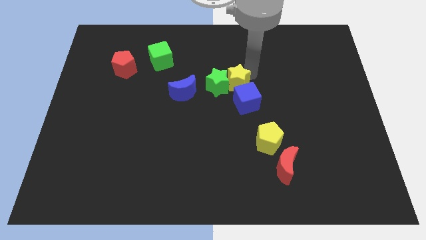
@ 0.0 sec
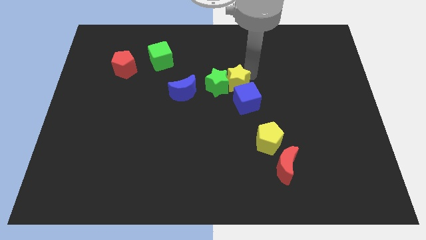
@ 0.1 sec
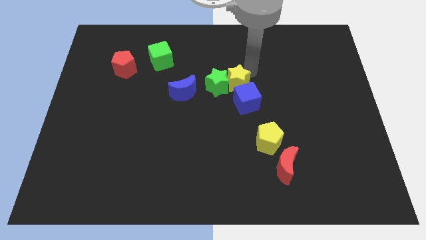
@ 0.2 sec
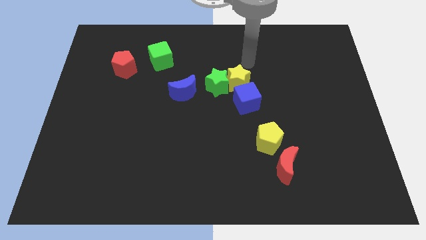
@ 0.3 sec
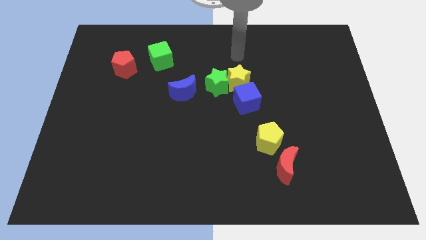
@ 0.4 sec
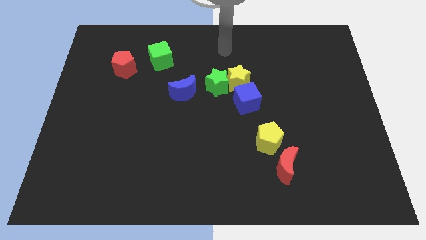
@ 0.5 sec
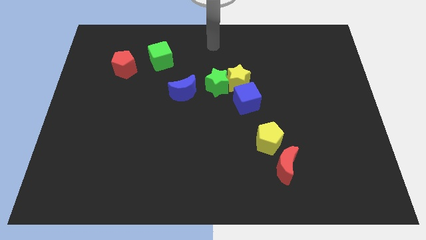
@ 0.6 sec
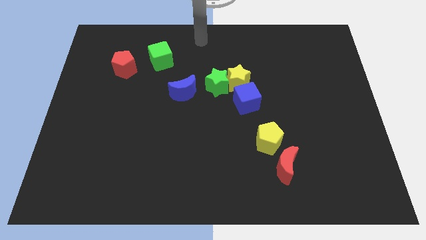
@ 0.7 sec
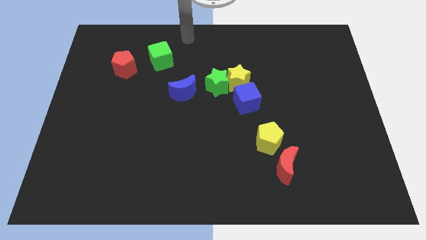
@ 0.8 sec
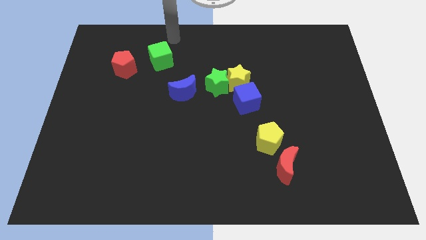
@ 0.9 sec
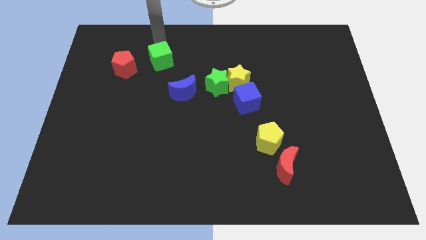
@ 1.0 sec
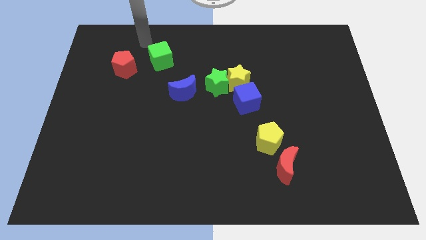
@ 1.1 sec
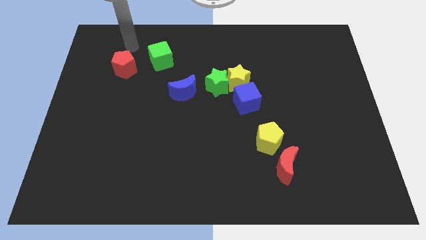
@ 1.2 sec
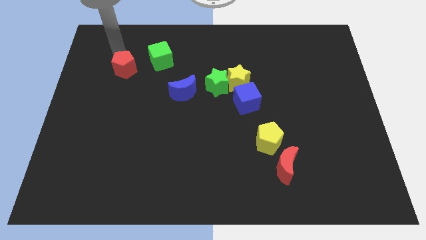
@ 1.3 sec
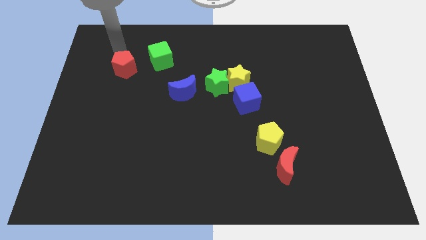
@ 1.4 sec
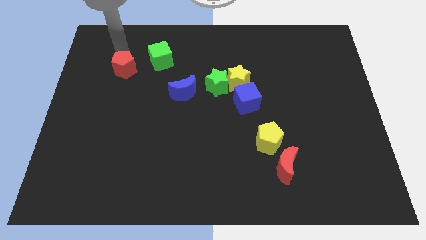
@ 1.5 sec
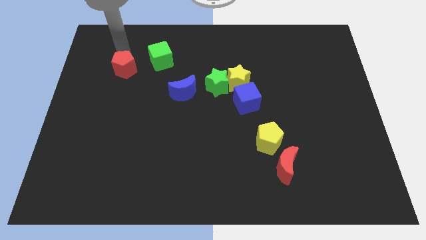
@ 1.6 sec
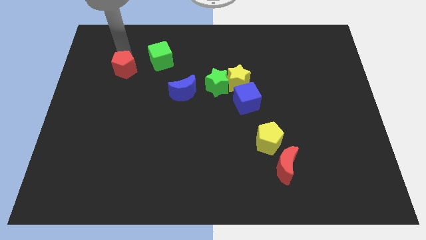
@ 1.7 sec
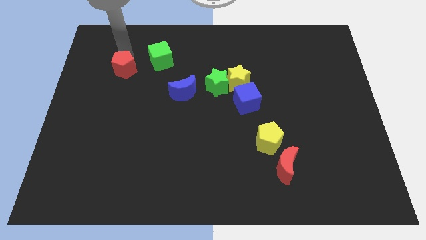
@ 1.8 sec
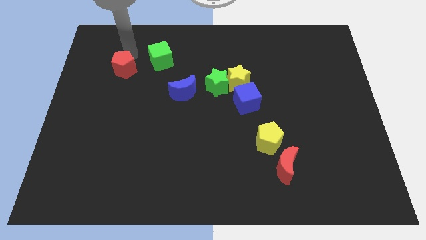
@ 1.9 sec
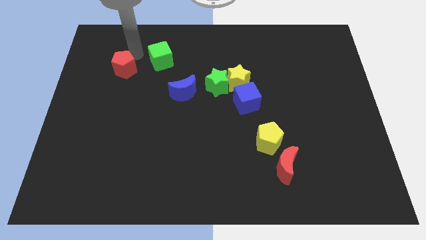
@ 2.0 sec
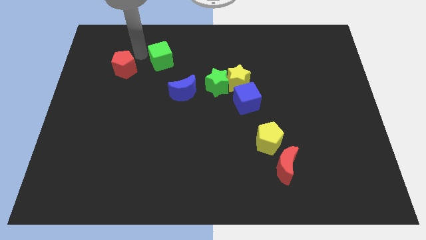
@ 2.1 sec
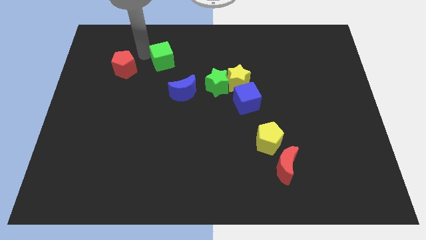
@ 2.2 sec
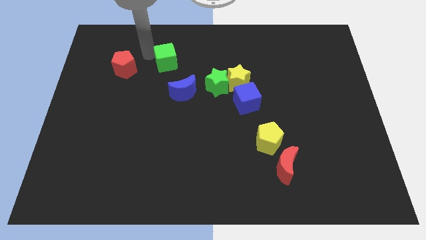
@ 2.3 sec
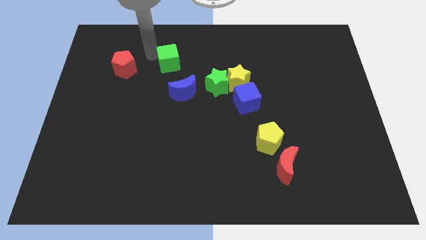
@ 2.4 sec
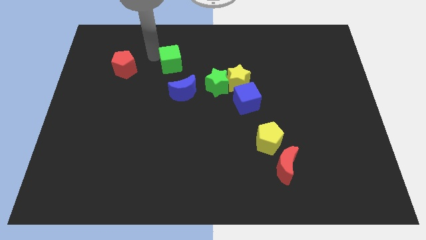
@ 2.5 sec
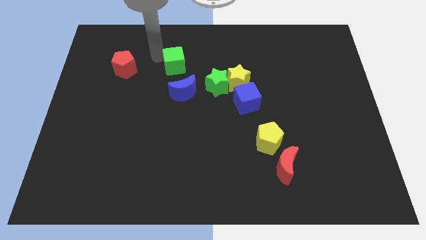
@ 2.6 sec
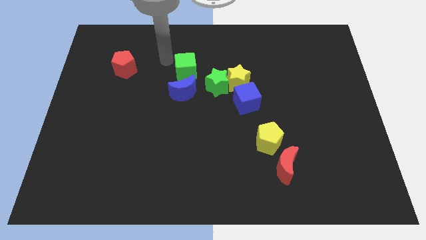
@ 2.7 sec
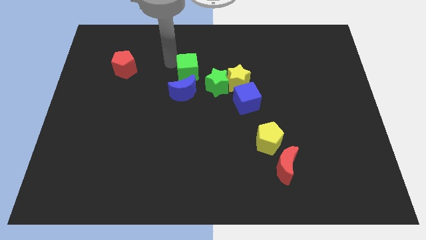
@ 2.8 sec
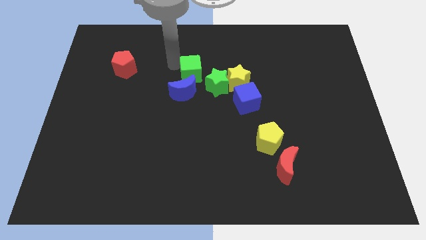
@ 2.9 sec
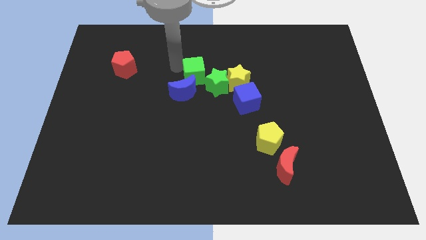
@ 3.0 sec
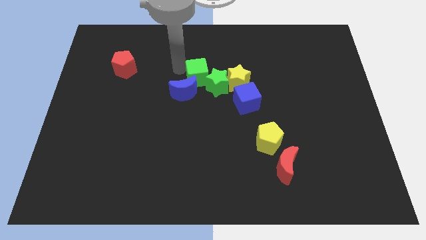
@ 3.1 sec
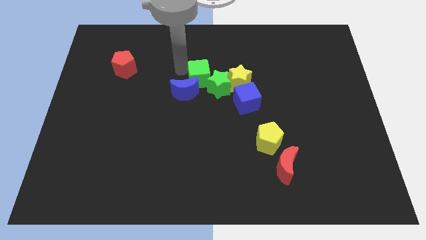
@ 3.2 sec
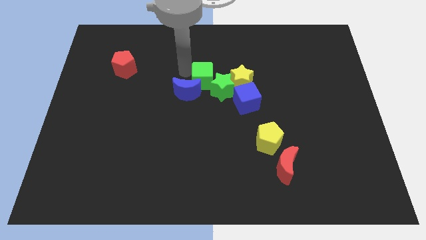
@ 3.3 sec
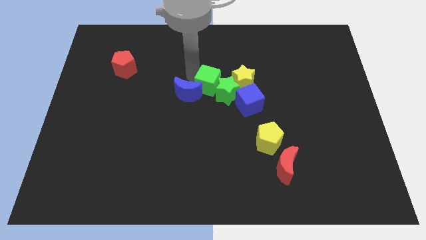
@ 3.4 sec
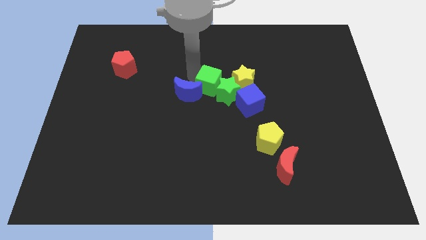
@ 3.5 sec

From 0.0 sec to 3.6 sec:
push the green cube into the green star

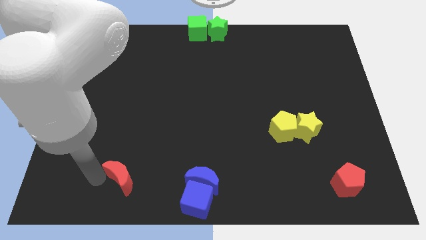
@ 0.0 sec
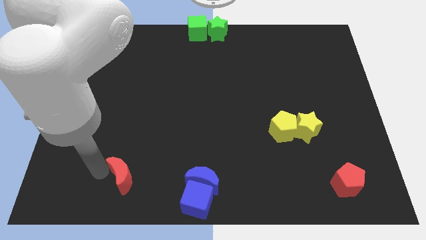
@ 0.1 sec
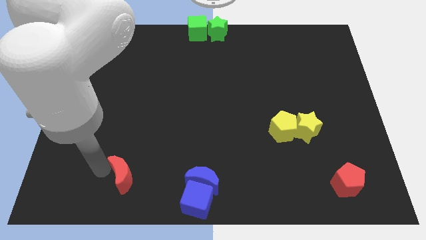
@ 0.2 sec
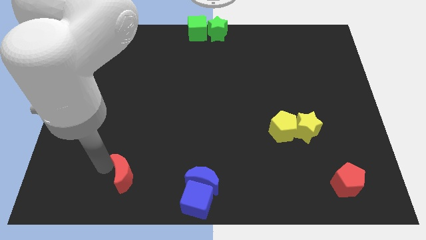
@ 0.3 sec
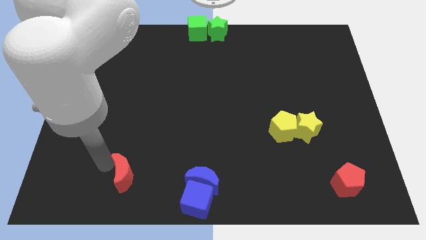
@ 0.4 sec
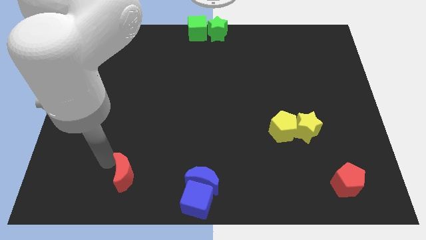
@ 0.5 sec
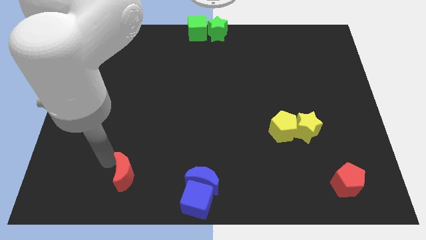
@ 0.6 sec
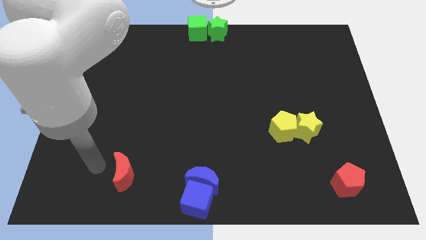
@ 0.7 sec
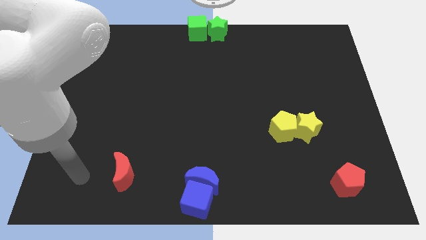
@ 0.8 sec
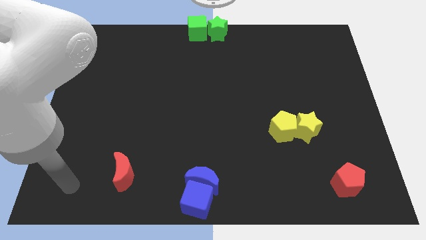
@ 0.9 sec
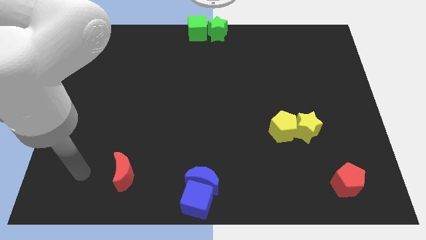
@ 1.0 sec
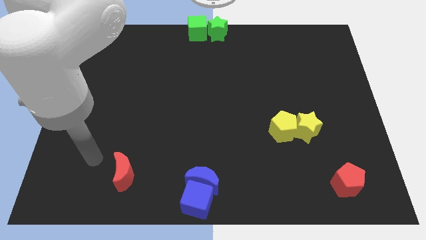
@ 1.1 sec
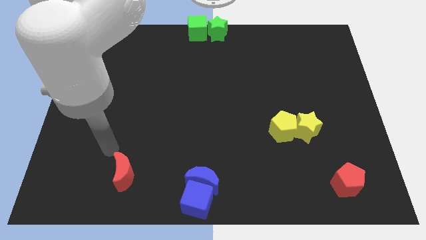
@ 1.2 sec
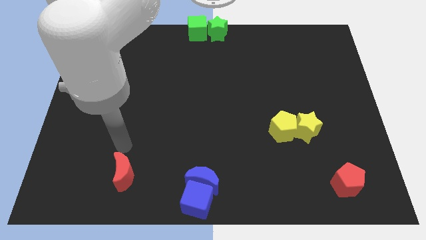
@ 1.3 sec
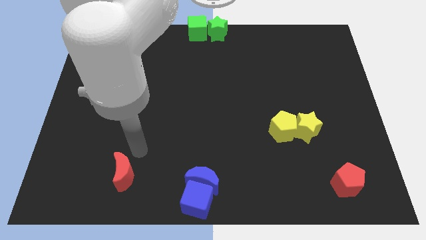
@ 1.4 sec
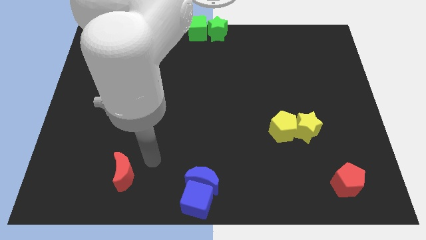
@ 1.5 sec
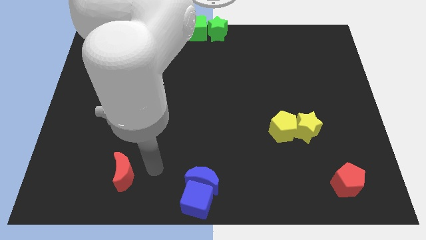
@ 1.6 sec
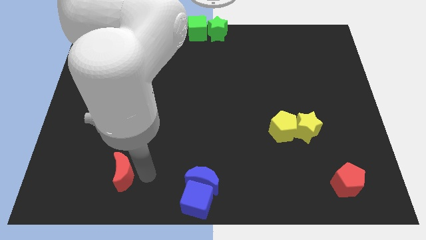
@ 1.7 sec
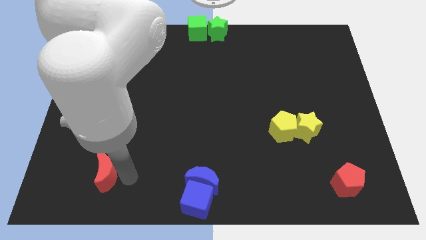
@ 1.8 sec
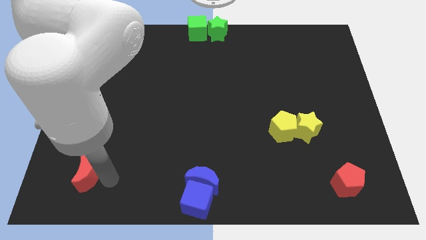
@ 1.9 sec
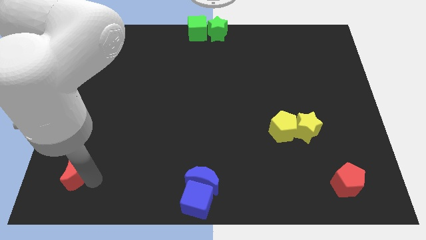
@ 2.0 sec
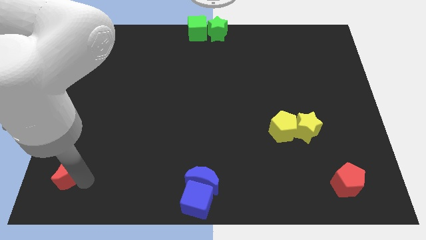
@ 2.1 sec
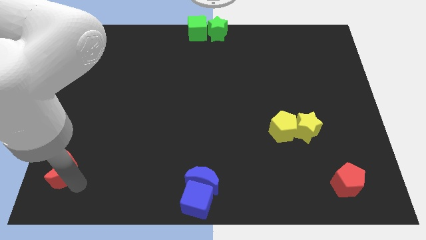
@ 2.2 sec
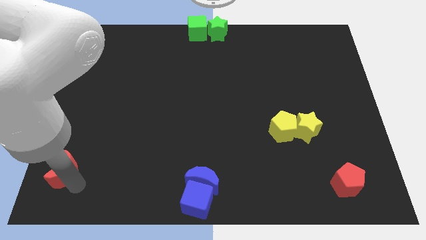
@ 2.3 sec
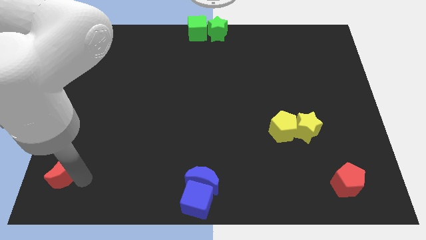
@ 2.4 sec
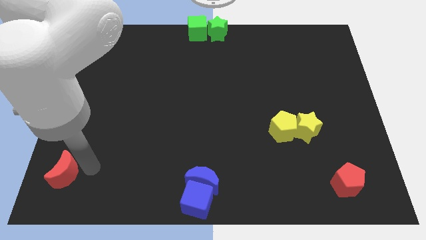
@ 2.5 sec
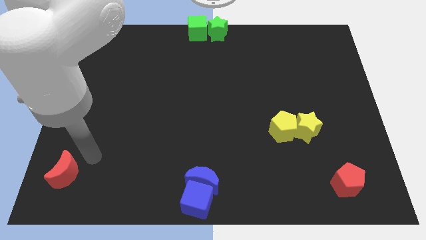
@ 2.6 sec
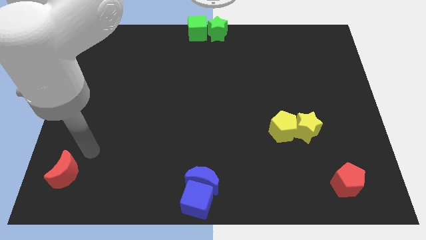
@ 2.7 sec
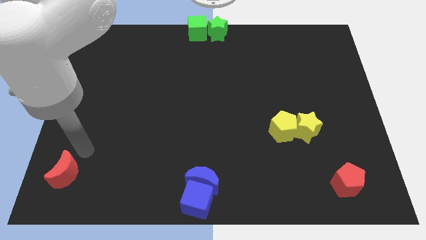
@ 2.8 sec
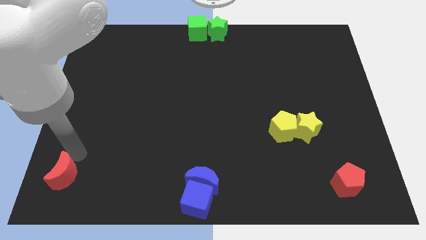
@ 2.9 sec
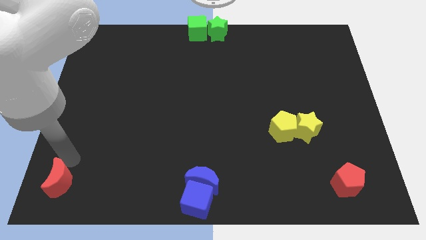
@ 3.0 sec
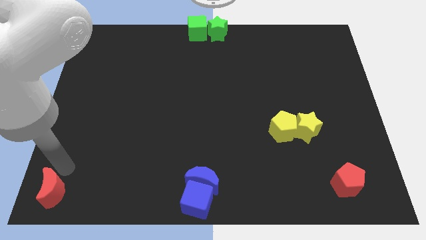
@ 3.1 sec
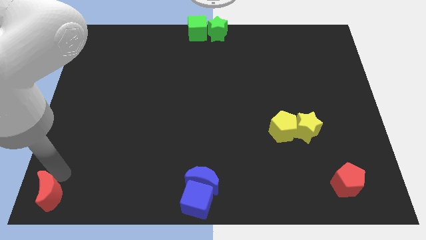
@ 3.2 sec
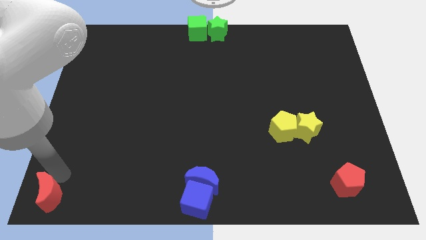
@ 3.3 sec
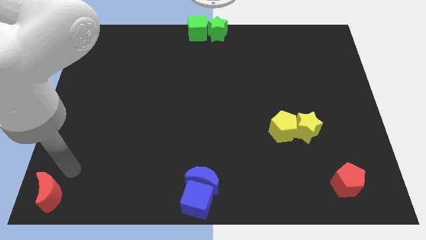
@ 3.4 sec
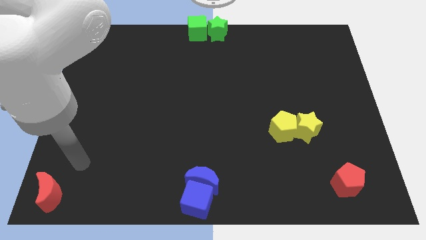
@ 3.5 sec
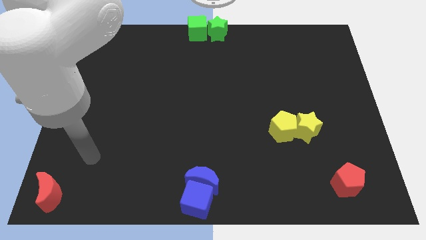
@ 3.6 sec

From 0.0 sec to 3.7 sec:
place red crescent towards bottom left corner

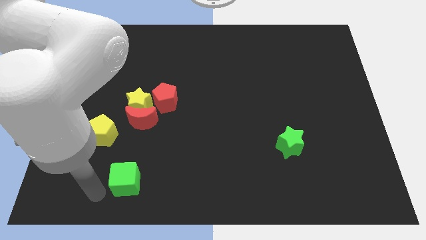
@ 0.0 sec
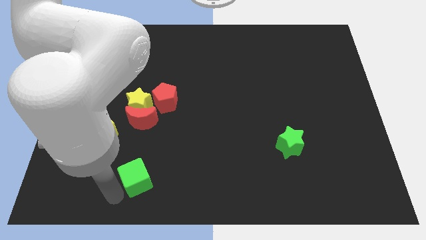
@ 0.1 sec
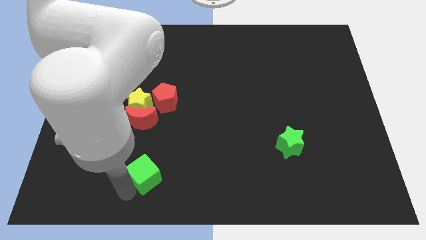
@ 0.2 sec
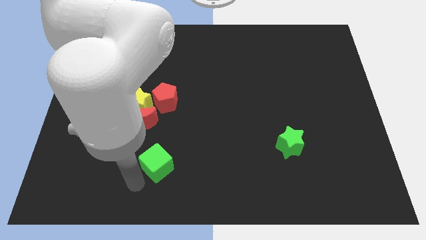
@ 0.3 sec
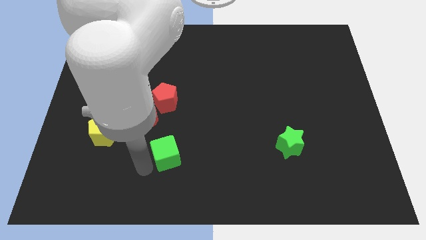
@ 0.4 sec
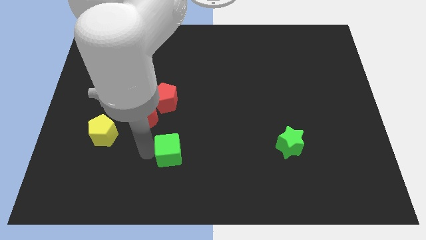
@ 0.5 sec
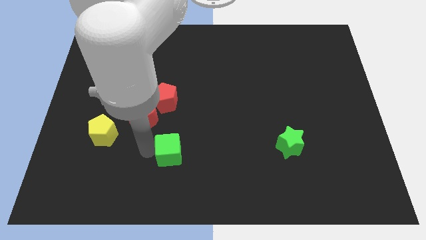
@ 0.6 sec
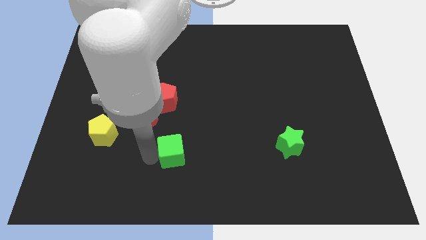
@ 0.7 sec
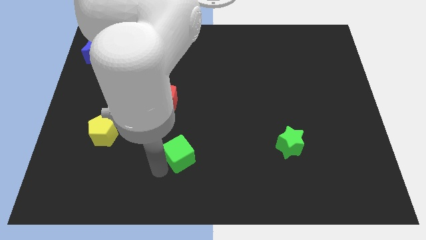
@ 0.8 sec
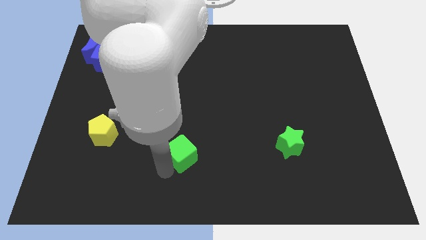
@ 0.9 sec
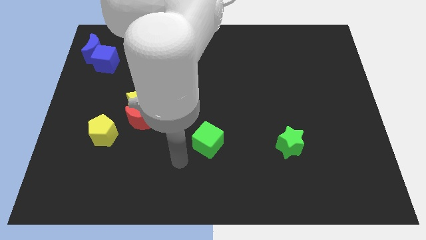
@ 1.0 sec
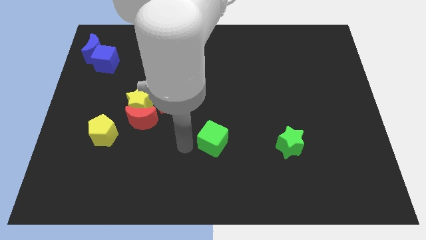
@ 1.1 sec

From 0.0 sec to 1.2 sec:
move the green cube to the left of the green star

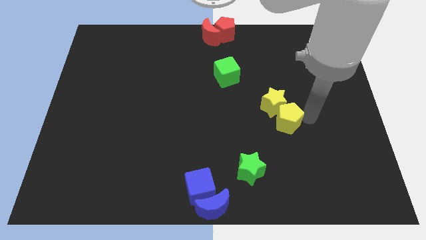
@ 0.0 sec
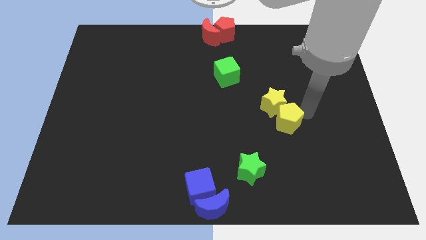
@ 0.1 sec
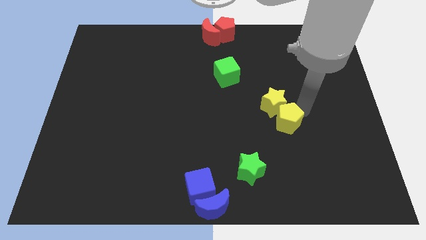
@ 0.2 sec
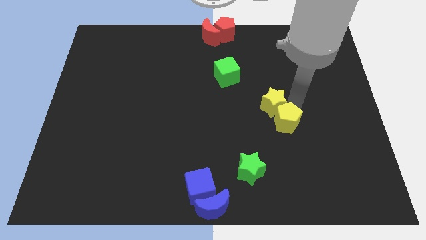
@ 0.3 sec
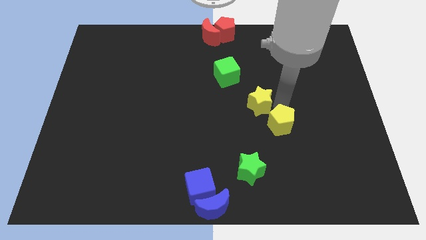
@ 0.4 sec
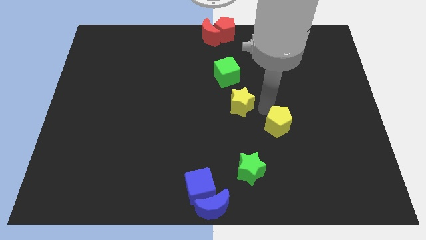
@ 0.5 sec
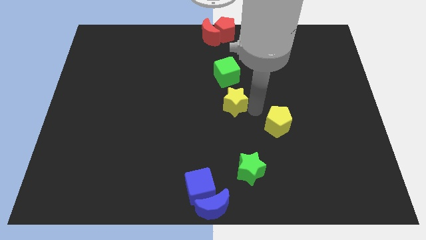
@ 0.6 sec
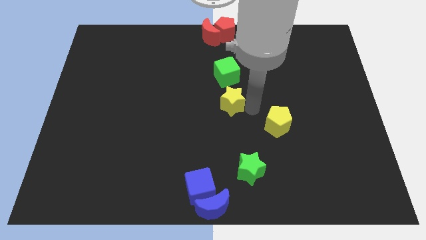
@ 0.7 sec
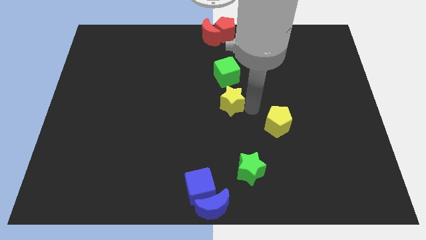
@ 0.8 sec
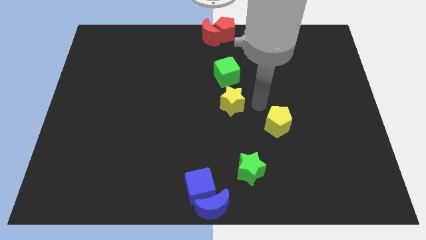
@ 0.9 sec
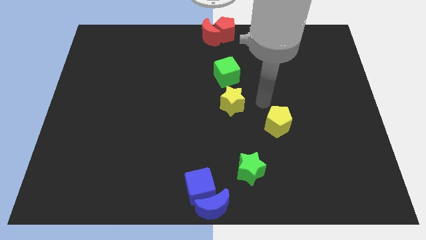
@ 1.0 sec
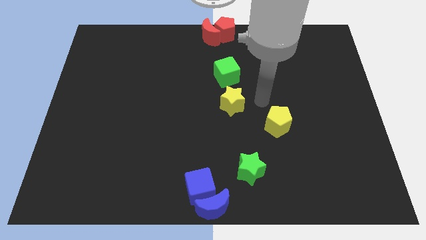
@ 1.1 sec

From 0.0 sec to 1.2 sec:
move the yellow star below the green cube
